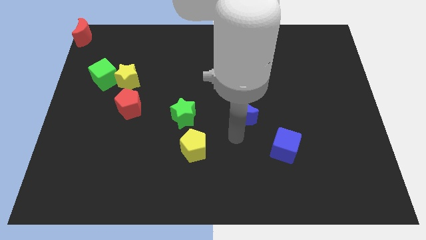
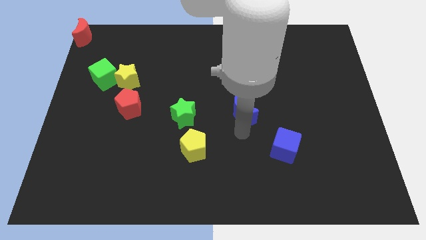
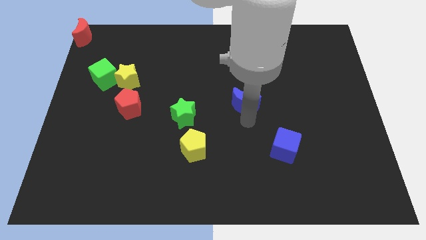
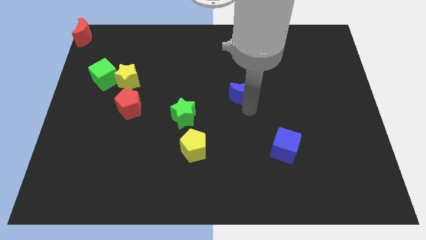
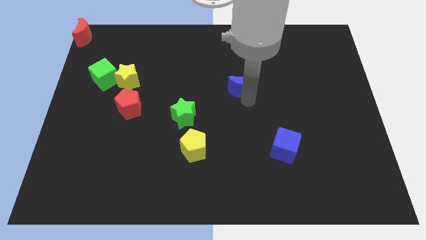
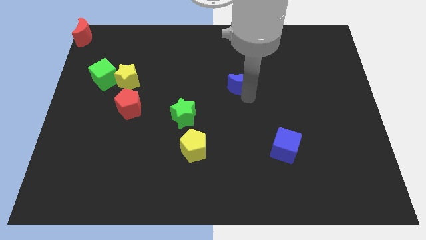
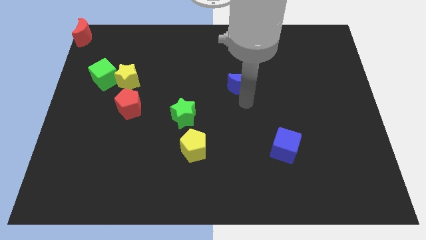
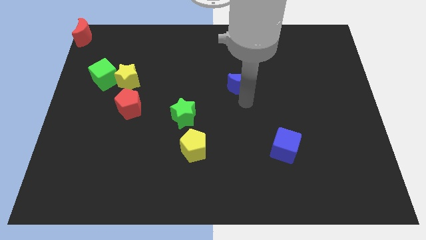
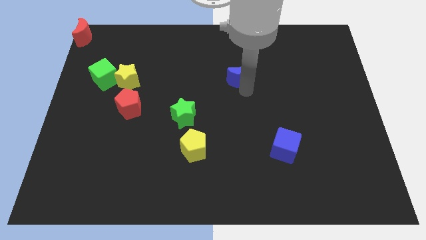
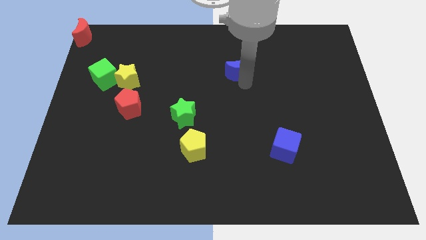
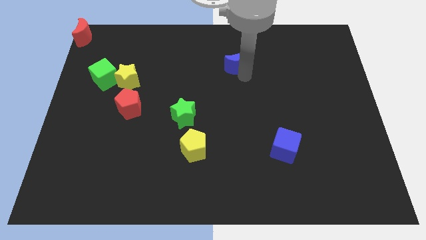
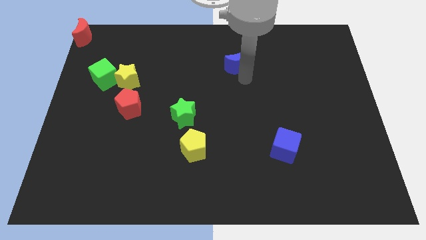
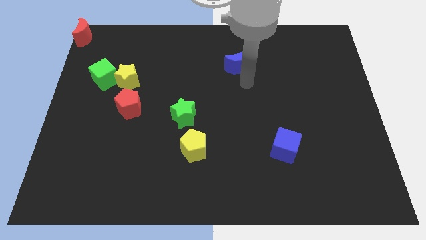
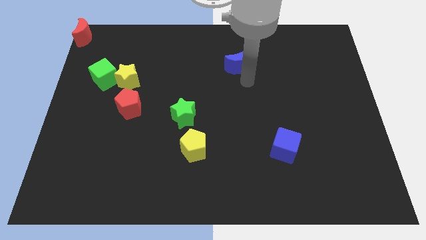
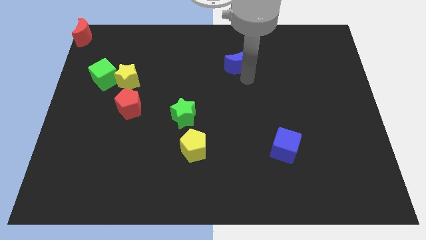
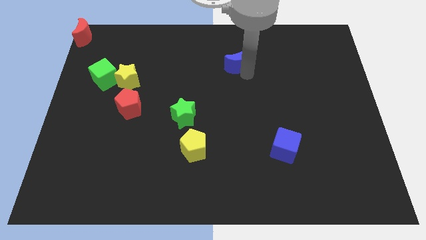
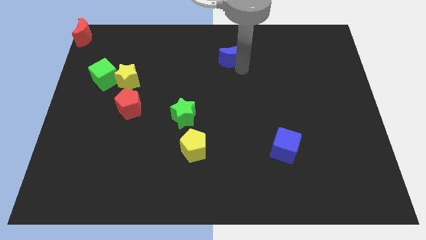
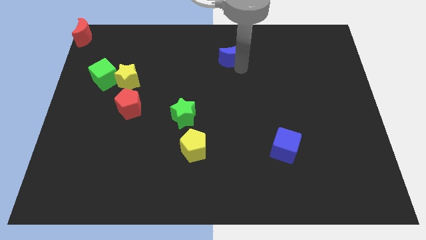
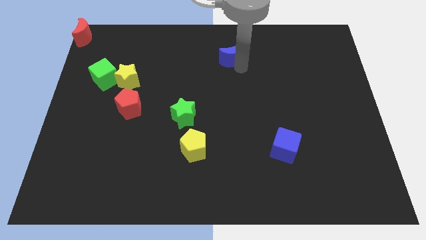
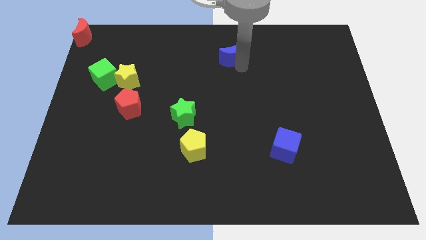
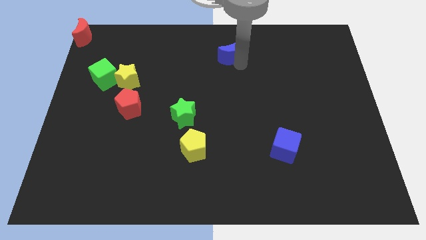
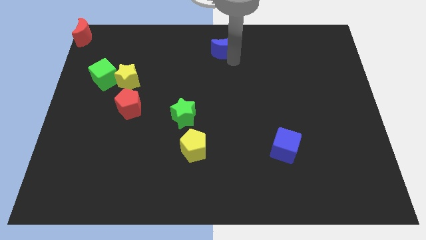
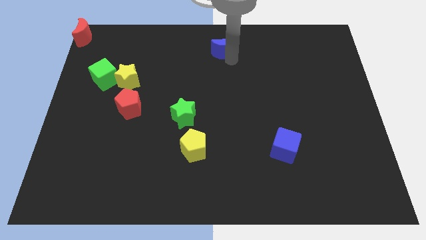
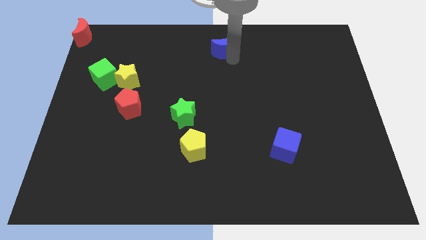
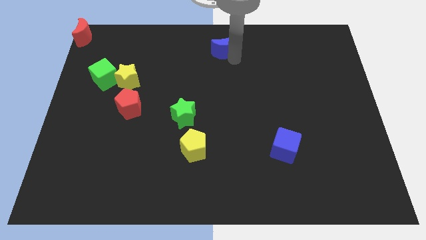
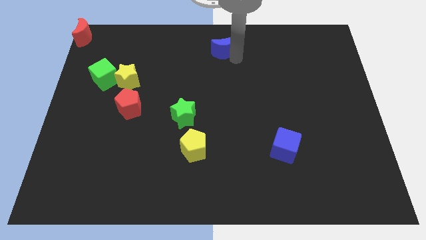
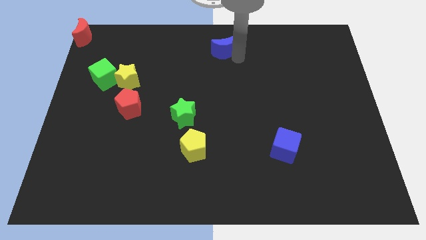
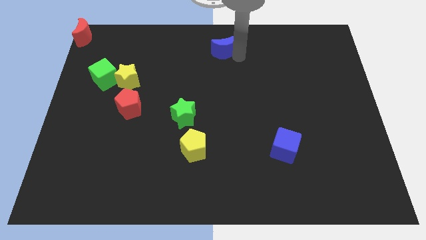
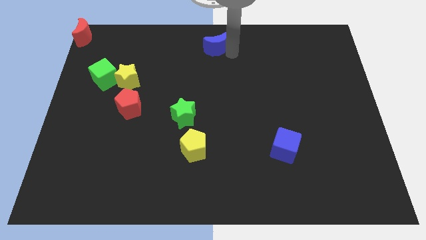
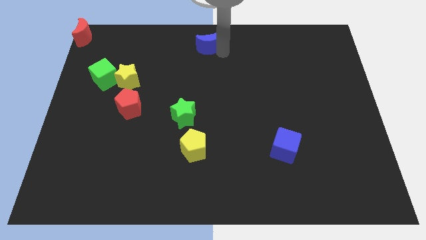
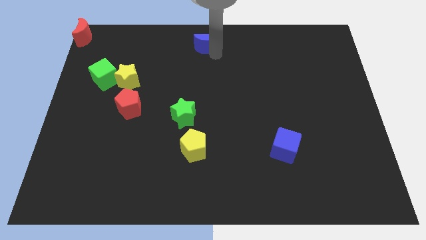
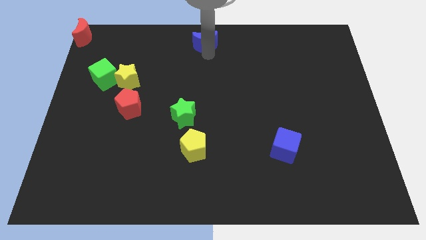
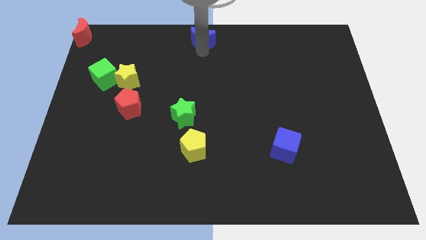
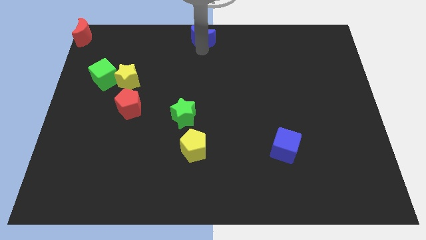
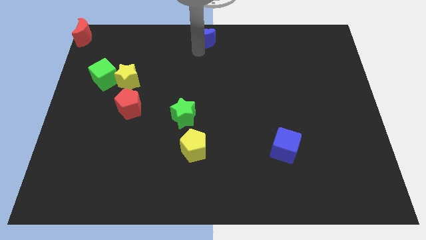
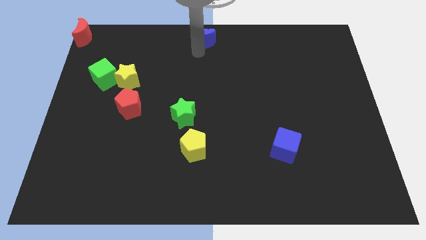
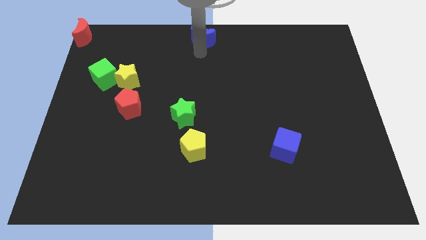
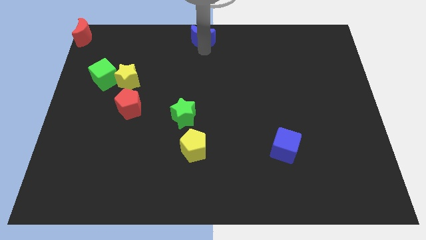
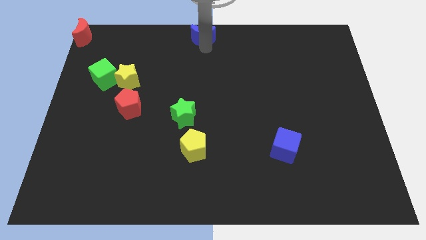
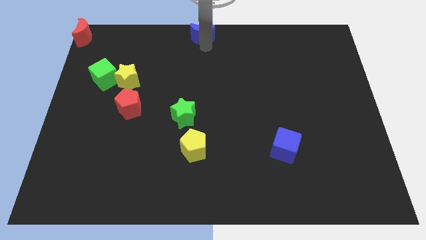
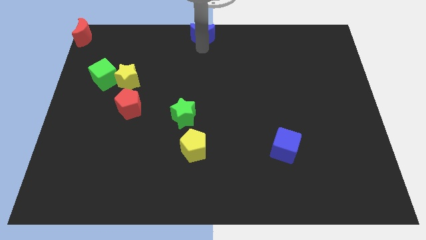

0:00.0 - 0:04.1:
place the blue crescent to the top center of the board

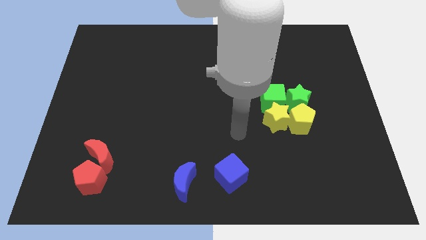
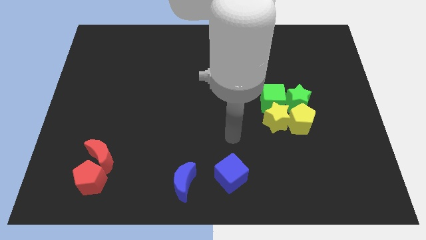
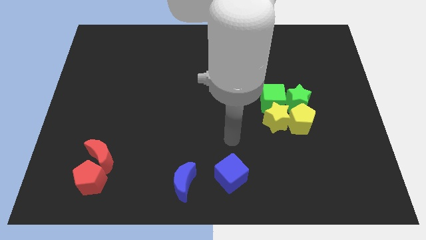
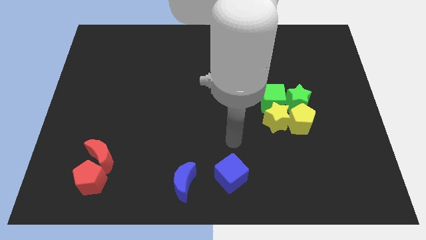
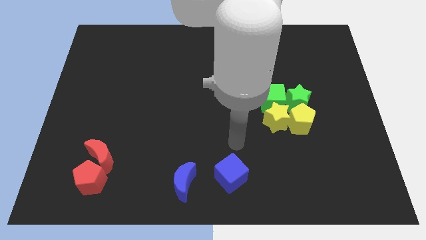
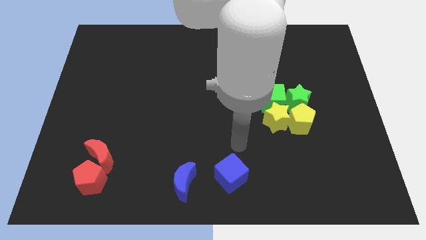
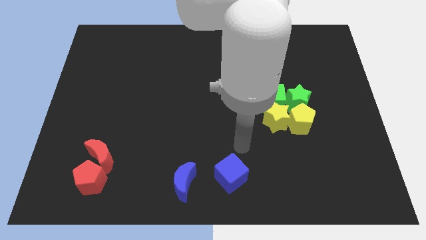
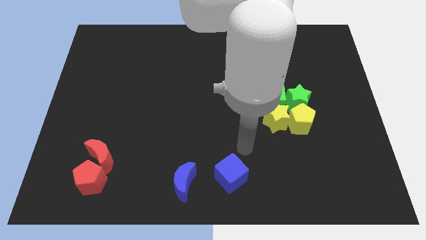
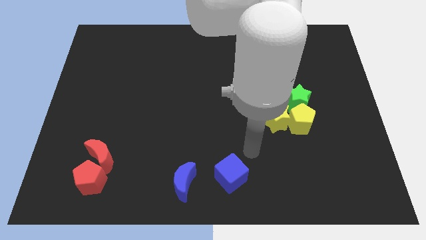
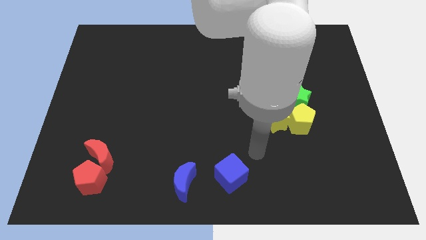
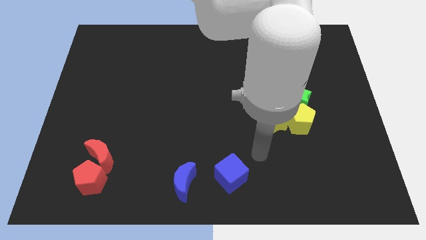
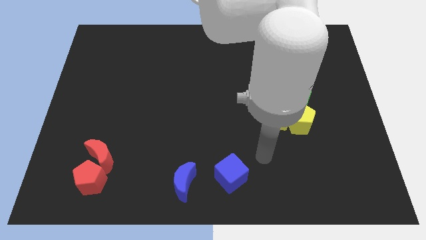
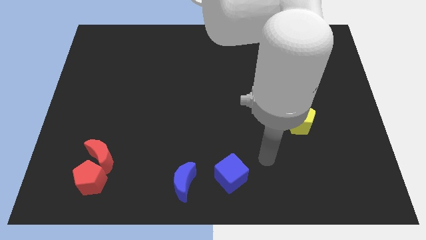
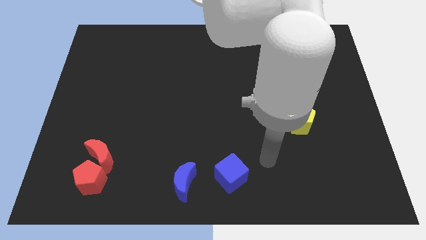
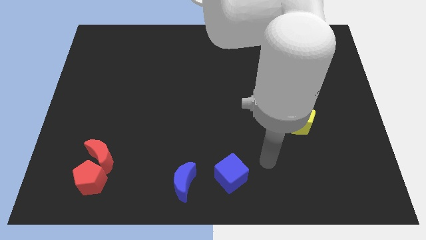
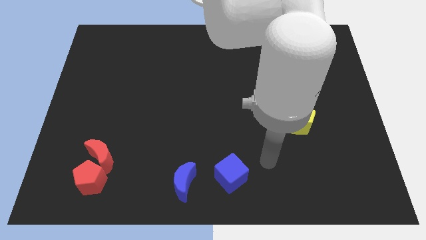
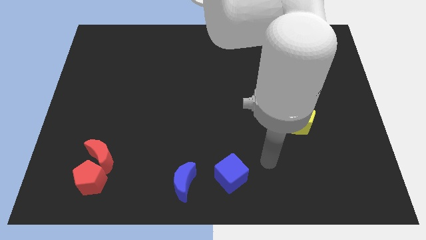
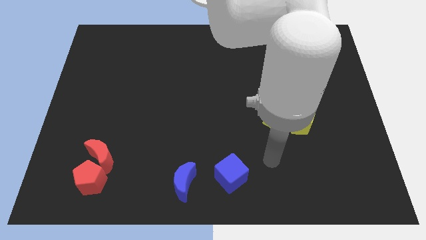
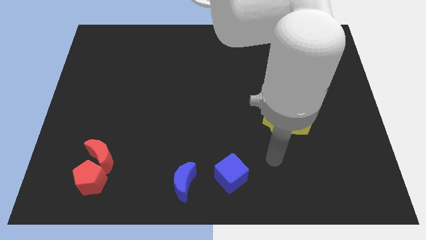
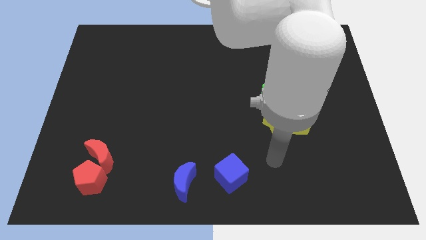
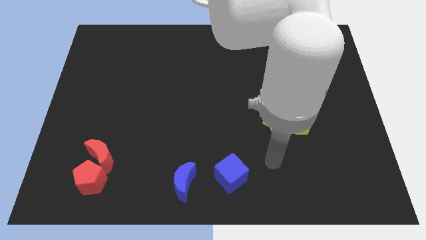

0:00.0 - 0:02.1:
move arm parallel to the blue cube

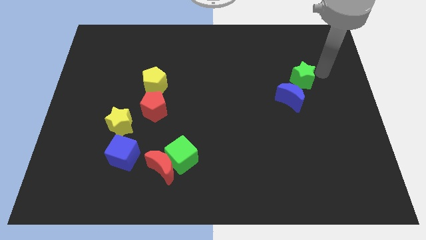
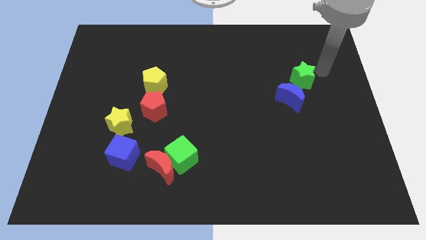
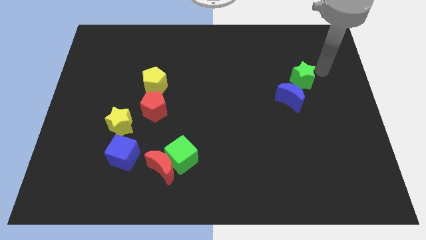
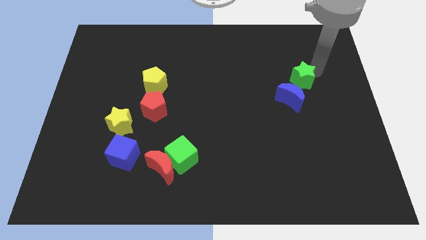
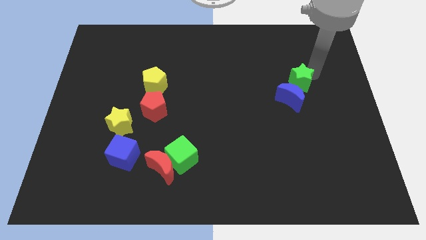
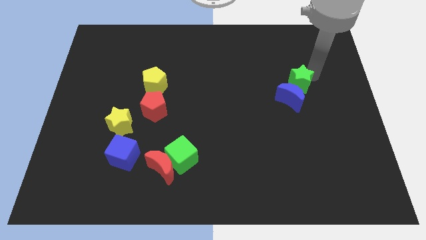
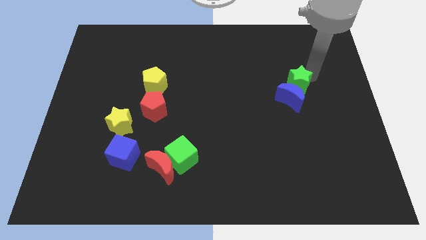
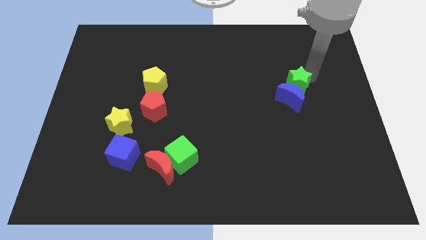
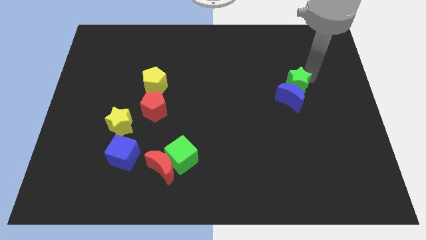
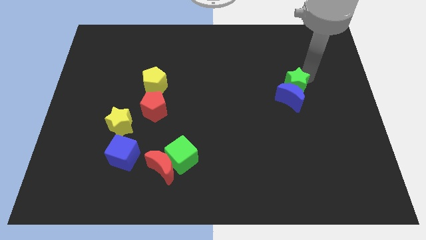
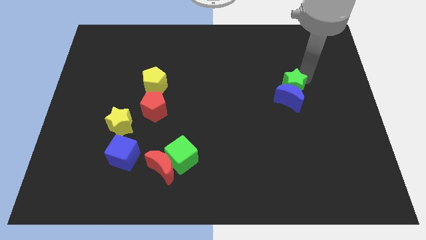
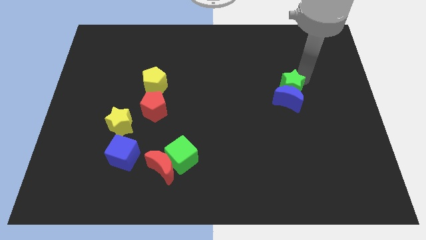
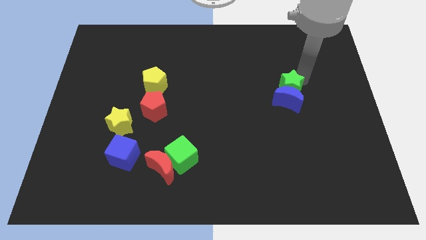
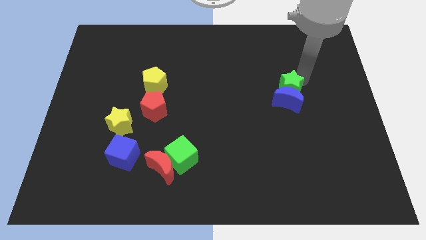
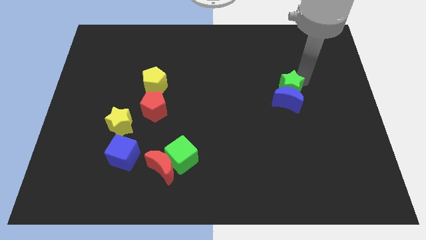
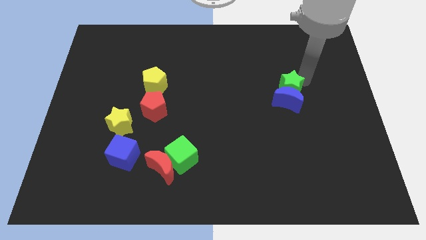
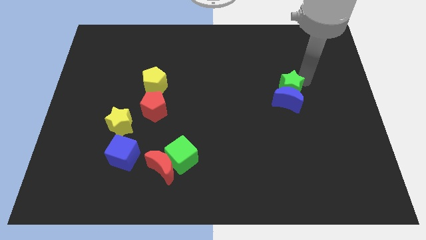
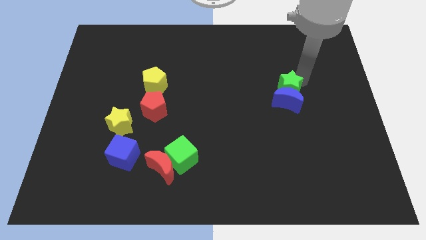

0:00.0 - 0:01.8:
push the green star into the blue moon

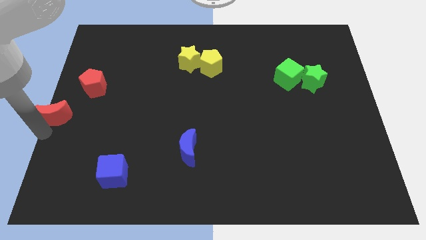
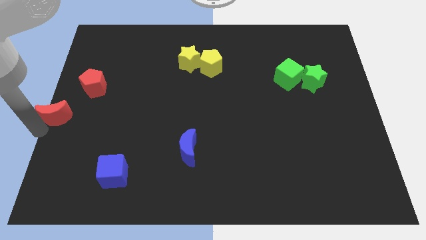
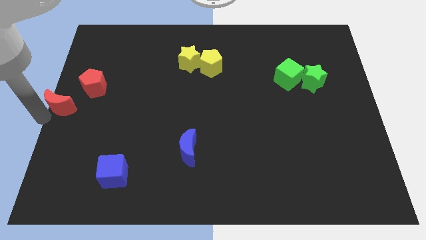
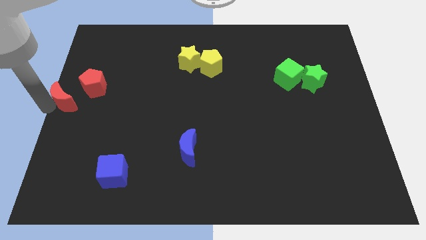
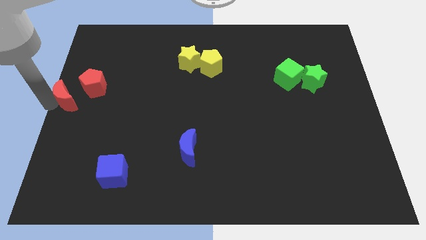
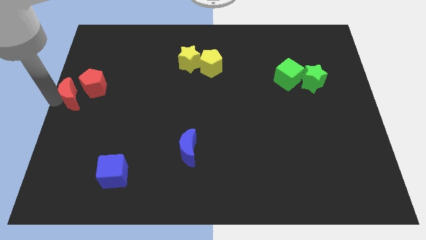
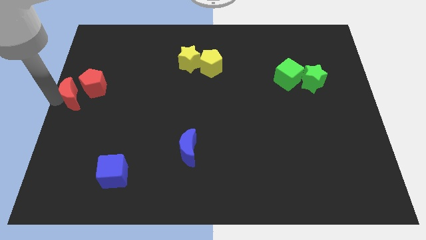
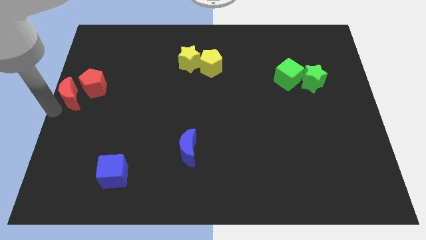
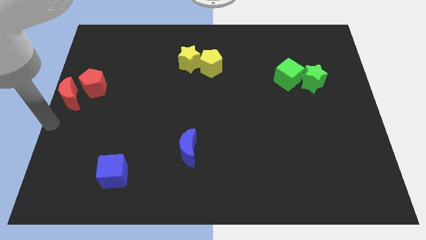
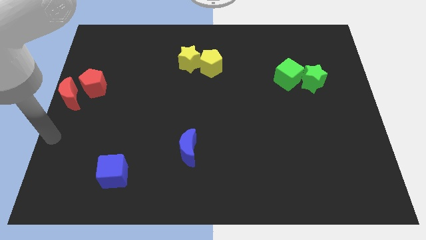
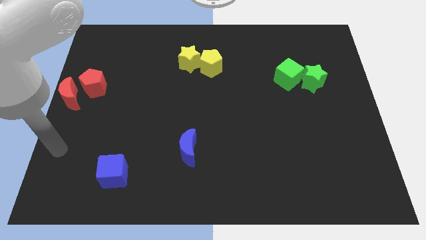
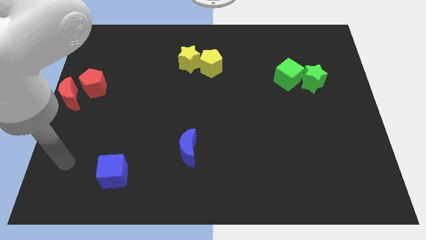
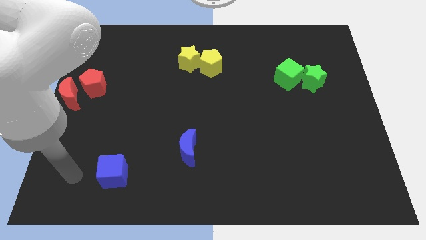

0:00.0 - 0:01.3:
push the red crescent to the left of the red pentagon
